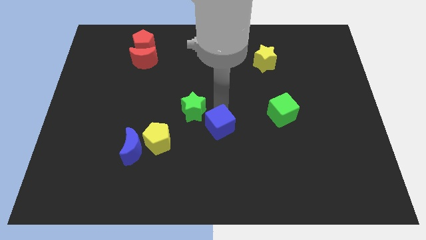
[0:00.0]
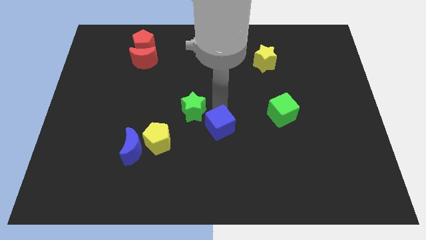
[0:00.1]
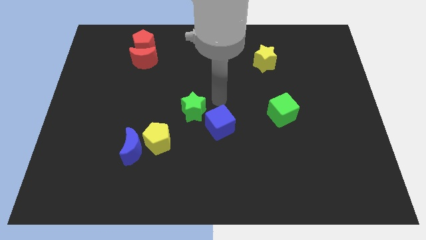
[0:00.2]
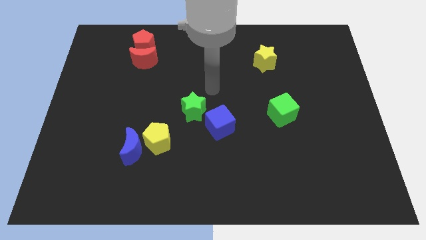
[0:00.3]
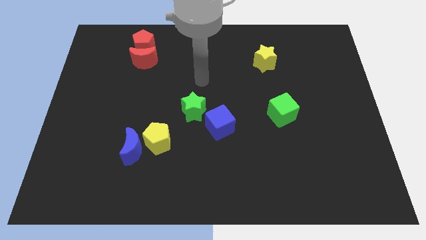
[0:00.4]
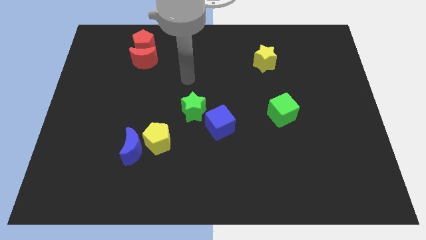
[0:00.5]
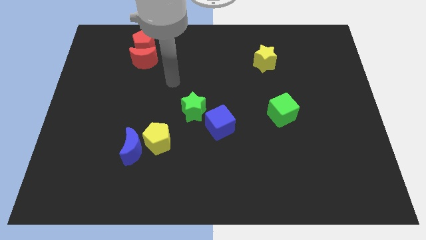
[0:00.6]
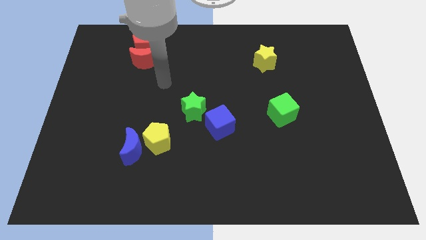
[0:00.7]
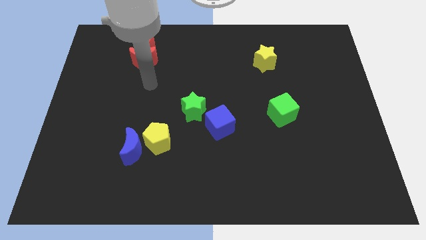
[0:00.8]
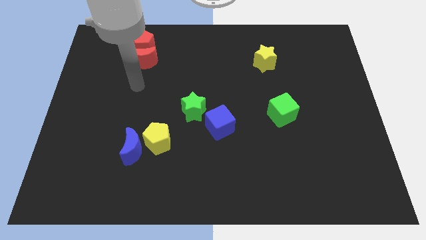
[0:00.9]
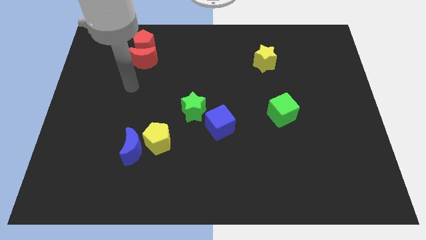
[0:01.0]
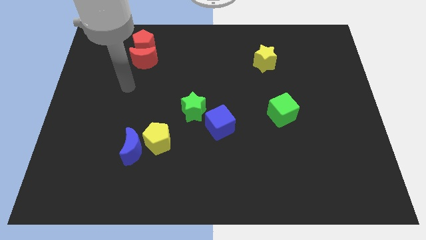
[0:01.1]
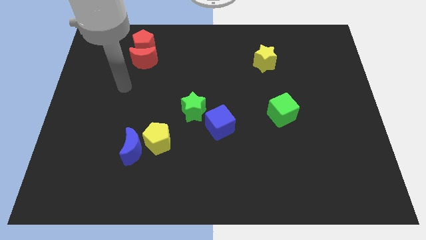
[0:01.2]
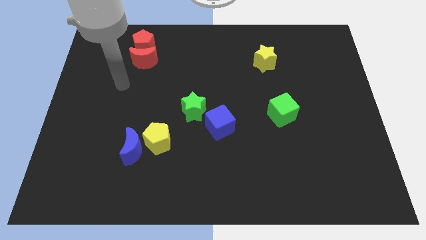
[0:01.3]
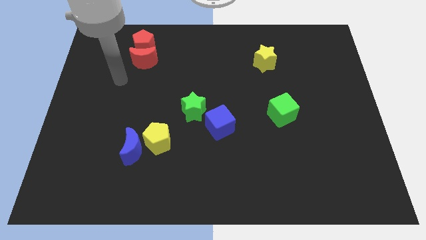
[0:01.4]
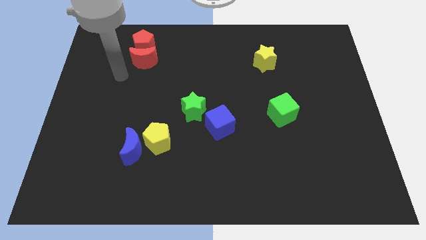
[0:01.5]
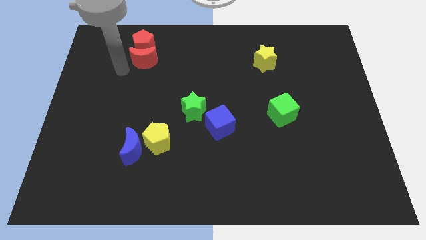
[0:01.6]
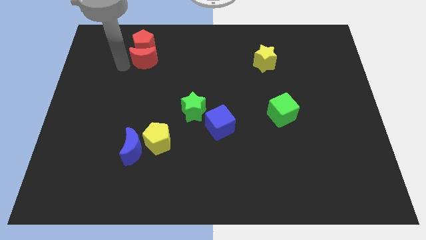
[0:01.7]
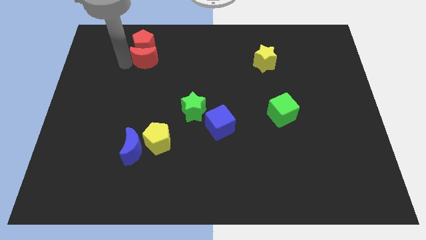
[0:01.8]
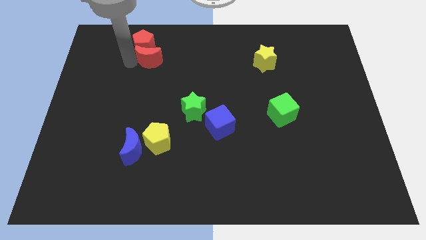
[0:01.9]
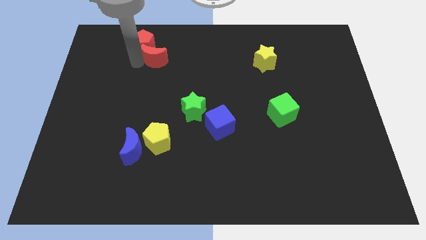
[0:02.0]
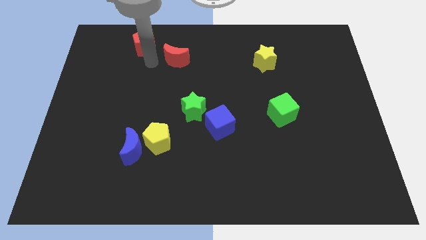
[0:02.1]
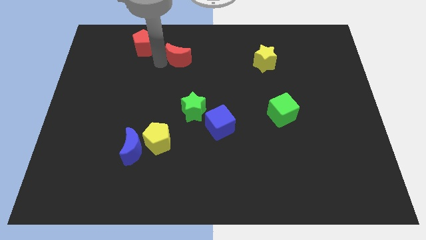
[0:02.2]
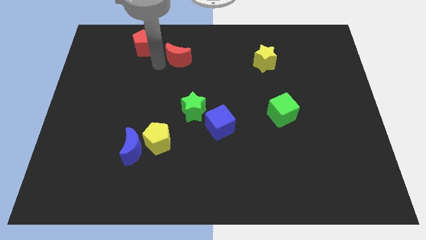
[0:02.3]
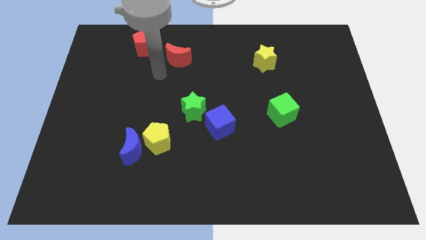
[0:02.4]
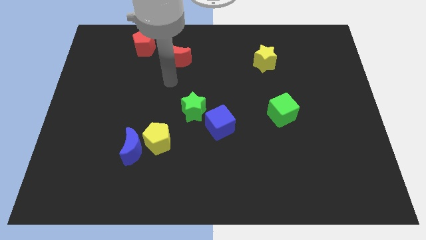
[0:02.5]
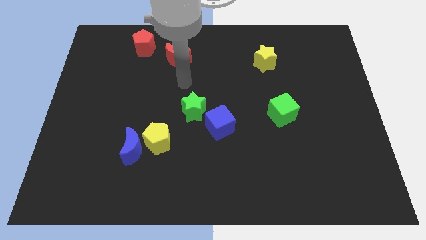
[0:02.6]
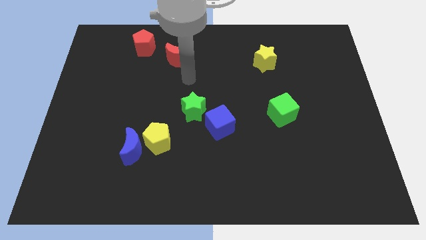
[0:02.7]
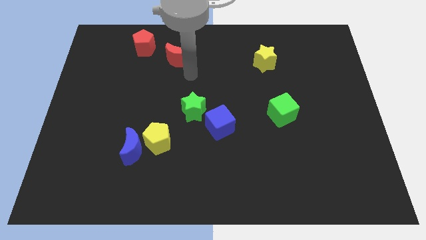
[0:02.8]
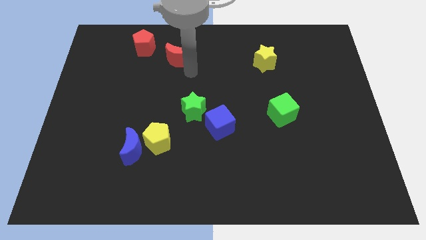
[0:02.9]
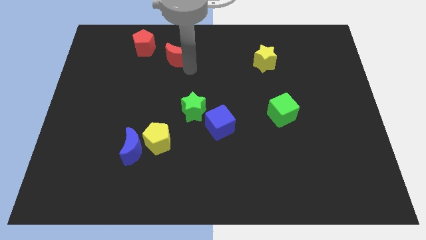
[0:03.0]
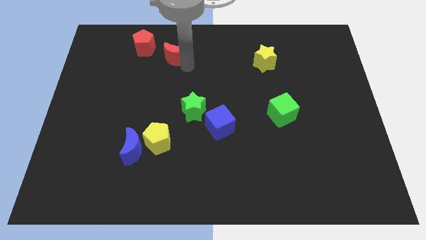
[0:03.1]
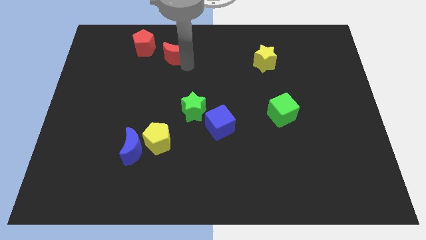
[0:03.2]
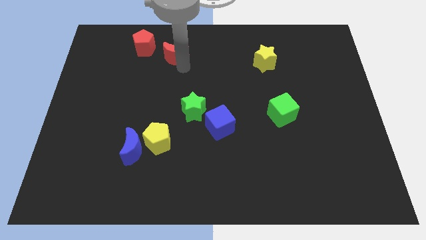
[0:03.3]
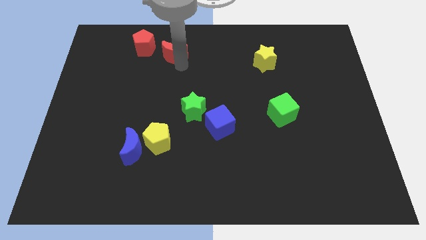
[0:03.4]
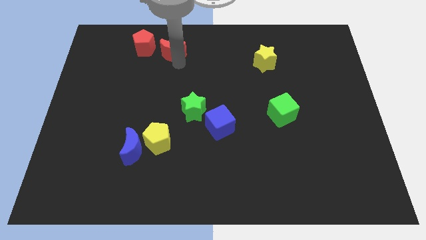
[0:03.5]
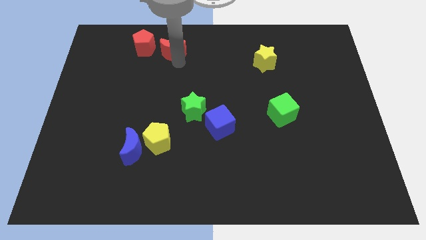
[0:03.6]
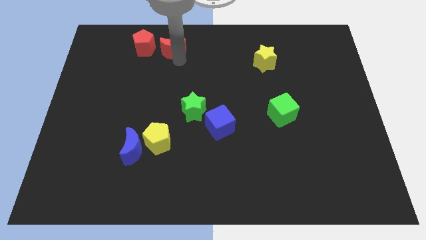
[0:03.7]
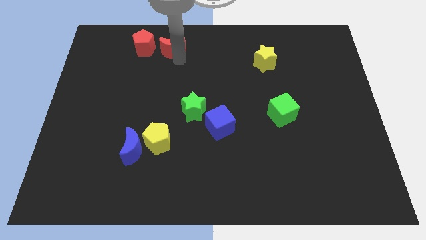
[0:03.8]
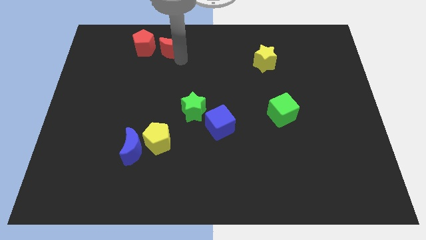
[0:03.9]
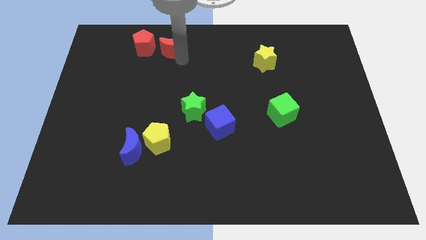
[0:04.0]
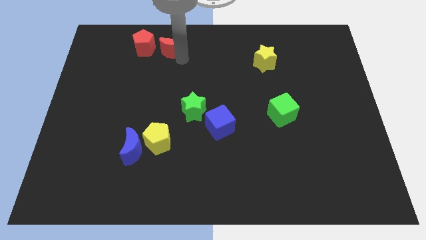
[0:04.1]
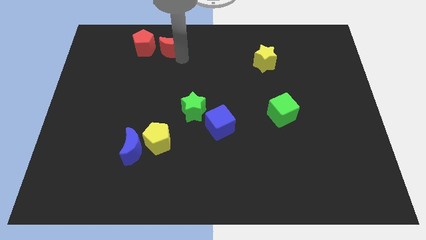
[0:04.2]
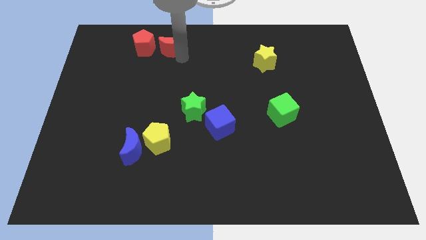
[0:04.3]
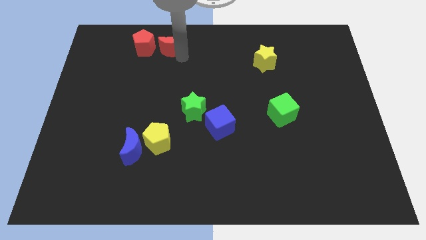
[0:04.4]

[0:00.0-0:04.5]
place the red crescent at right side of the red pentagon

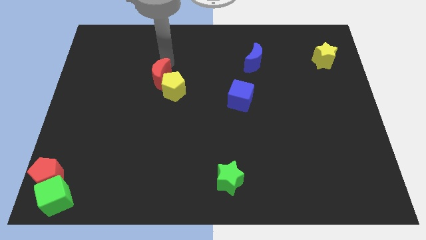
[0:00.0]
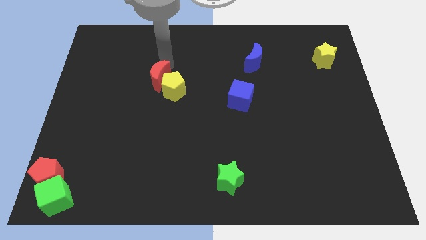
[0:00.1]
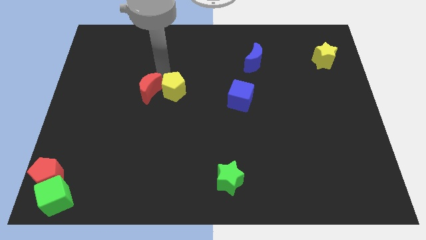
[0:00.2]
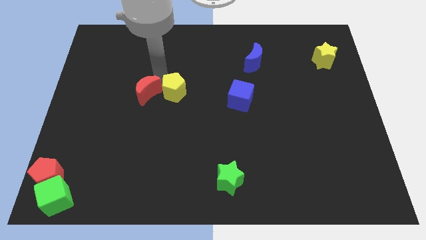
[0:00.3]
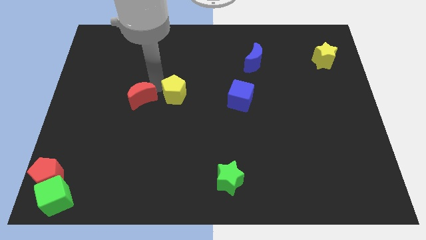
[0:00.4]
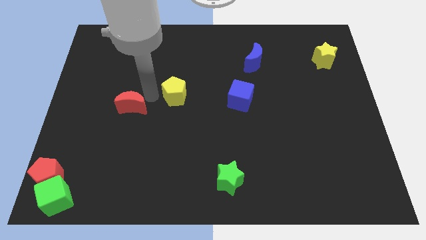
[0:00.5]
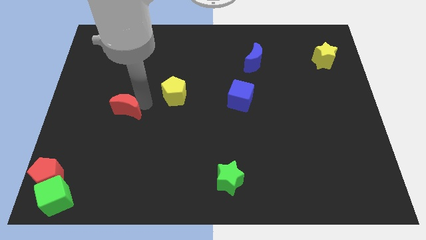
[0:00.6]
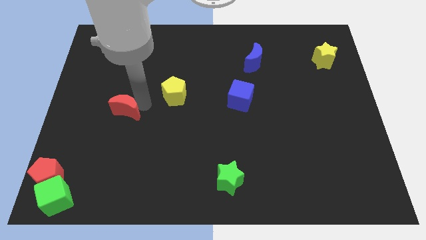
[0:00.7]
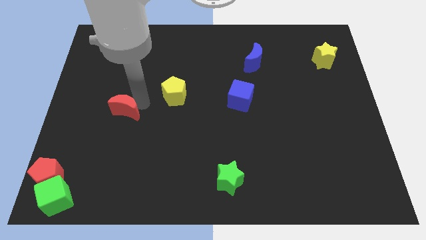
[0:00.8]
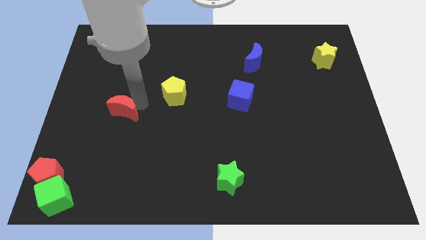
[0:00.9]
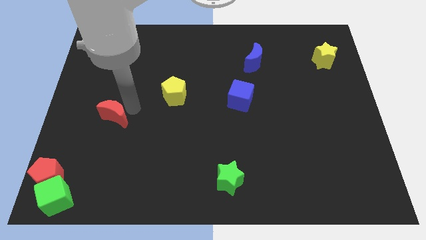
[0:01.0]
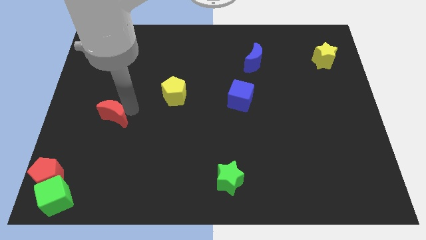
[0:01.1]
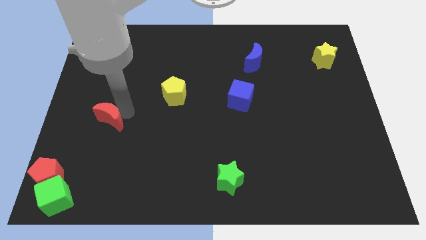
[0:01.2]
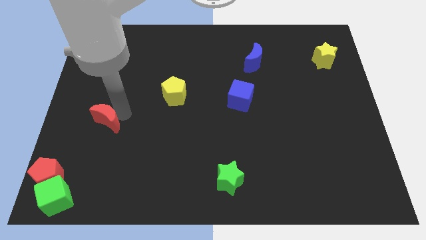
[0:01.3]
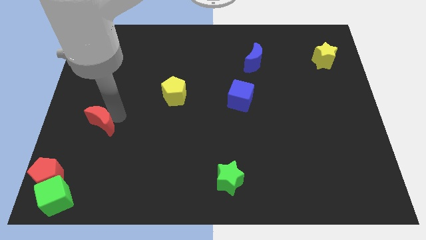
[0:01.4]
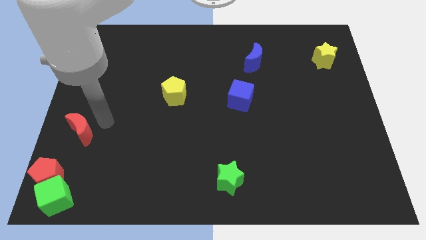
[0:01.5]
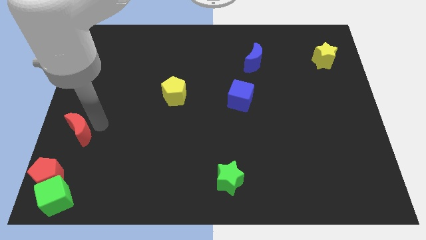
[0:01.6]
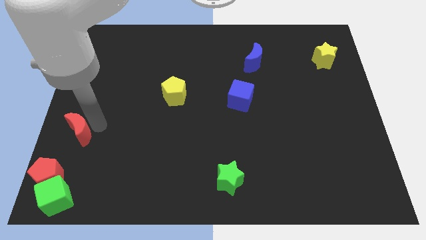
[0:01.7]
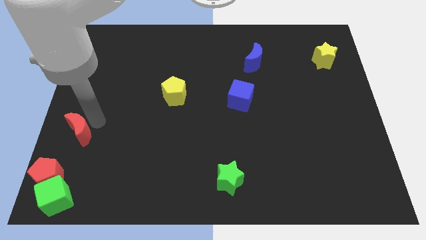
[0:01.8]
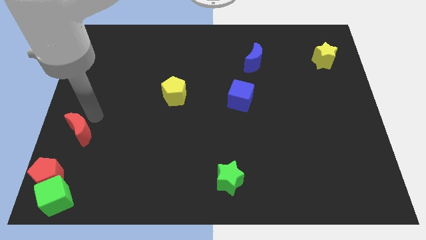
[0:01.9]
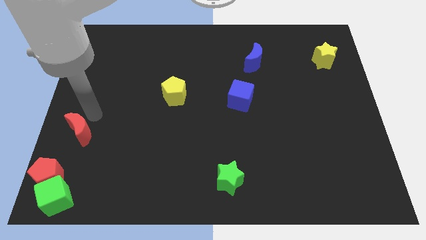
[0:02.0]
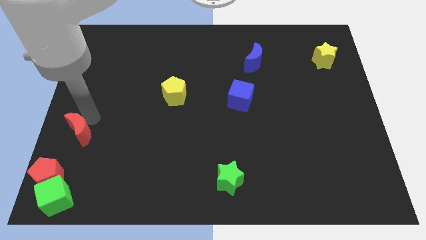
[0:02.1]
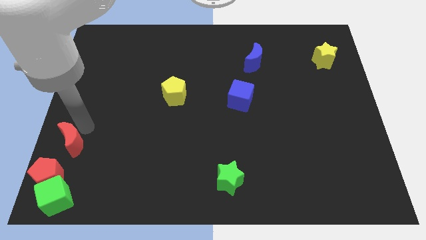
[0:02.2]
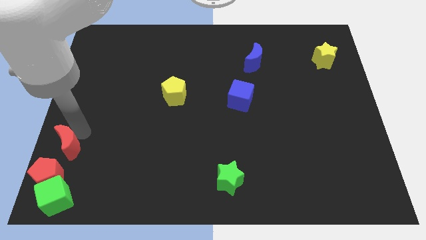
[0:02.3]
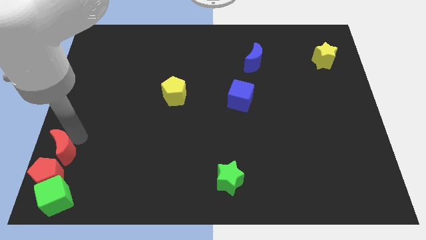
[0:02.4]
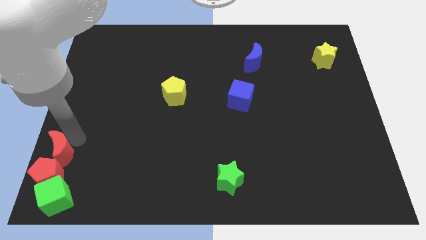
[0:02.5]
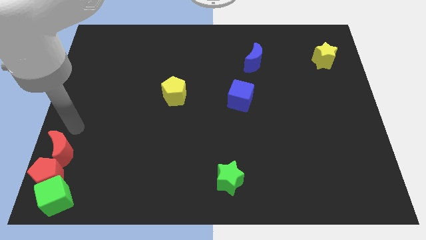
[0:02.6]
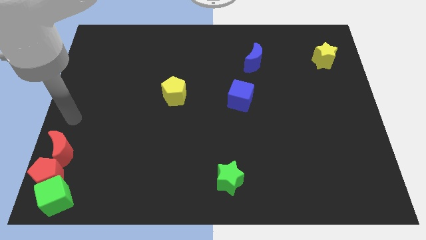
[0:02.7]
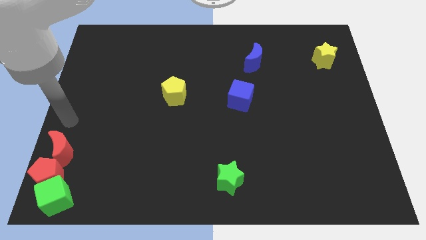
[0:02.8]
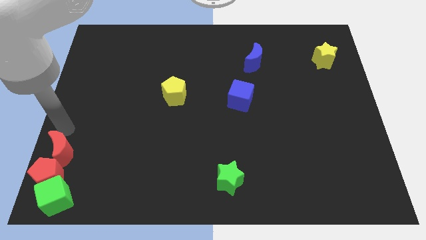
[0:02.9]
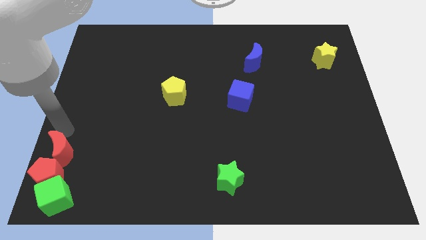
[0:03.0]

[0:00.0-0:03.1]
make the red crescent to touch the top side of the red pentagon

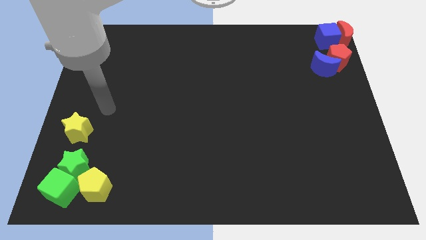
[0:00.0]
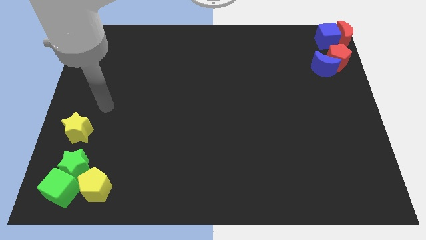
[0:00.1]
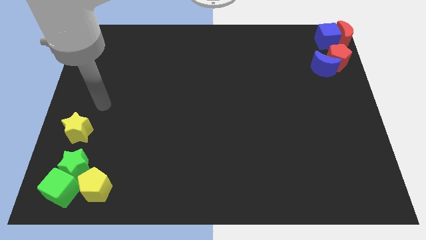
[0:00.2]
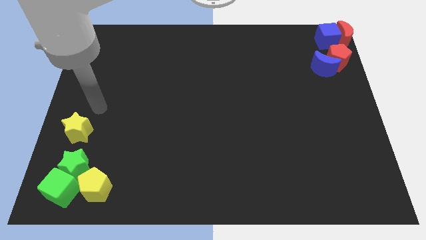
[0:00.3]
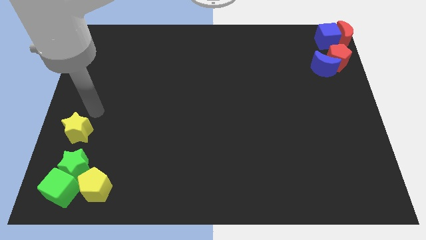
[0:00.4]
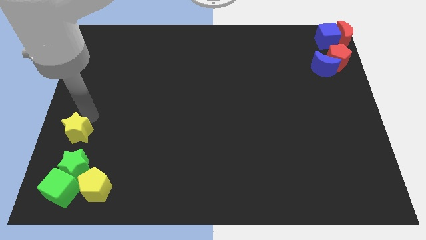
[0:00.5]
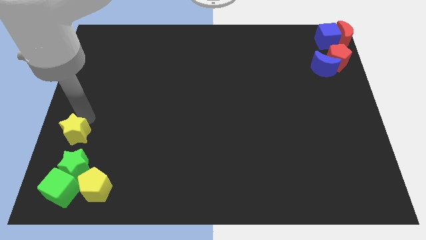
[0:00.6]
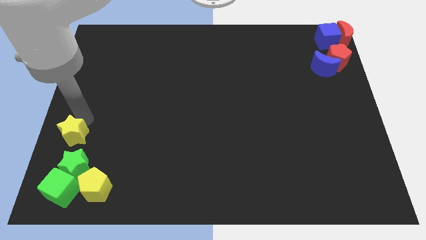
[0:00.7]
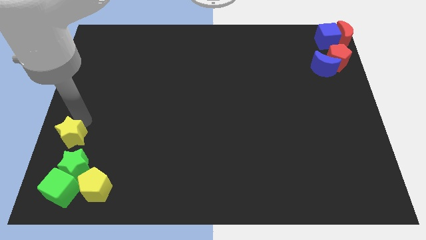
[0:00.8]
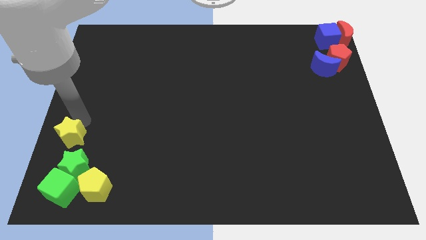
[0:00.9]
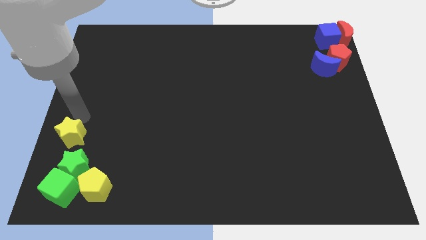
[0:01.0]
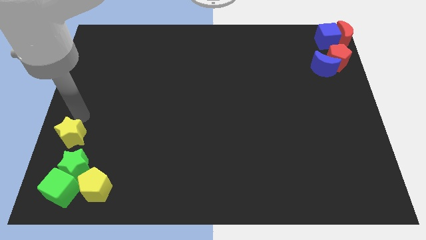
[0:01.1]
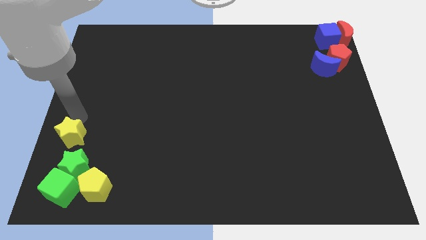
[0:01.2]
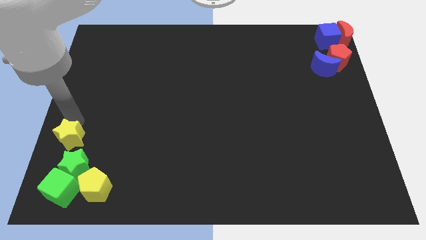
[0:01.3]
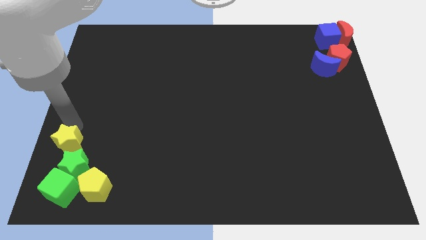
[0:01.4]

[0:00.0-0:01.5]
move the yellow pentagon to the top left side of the green star
